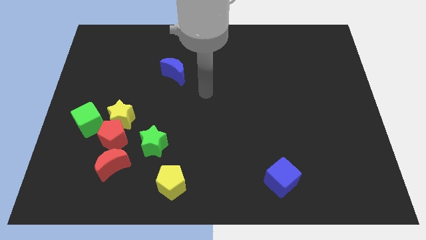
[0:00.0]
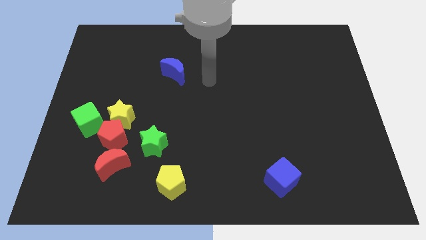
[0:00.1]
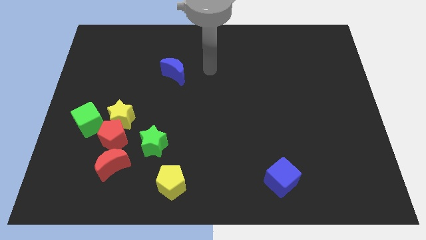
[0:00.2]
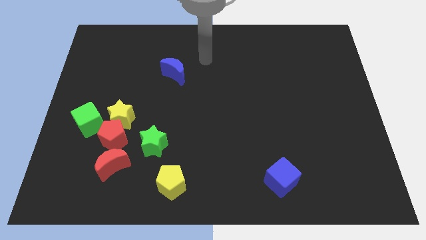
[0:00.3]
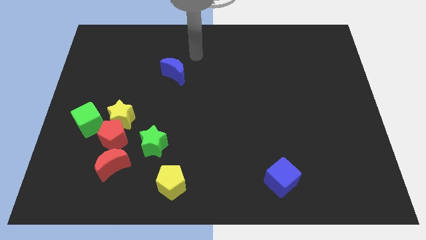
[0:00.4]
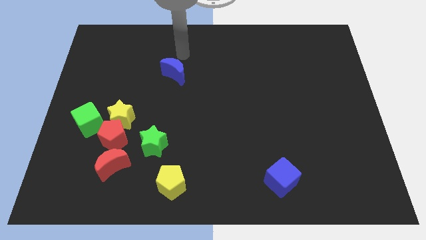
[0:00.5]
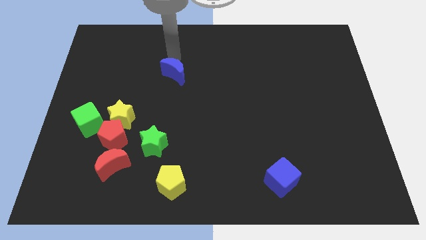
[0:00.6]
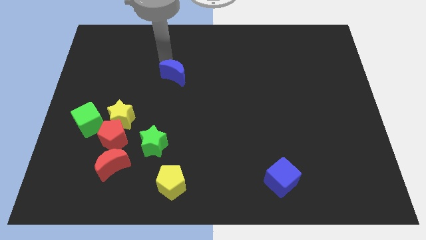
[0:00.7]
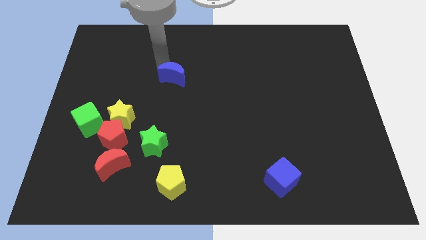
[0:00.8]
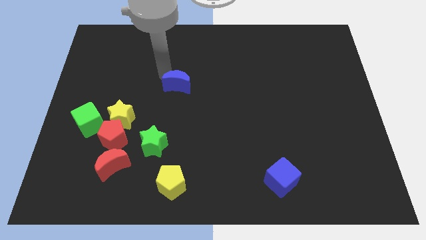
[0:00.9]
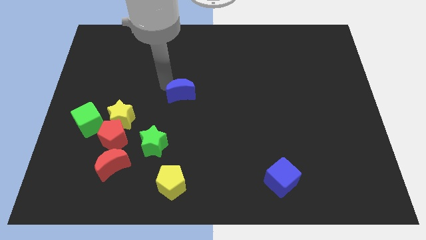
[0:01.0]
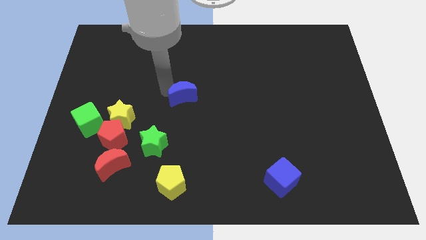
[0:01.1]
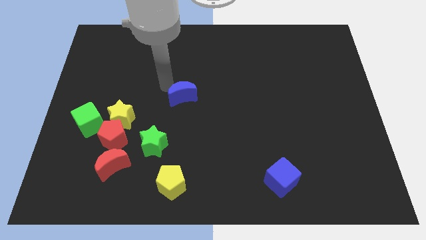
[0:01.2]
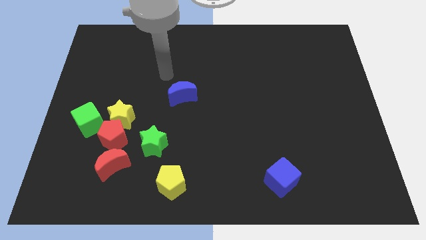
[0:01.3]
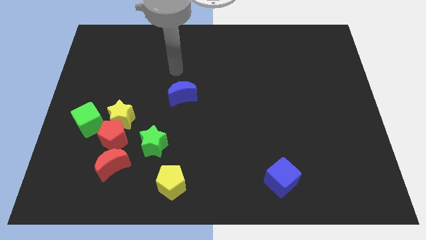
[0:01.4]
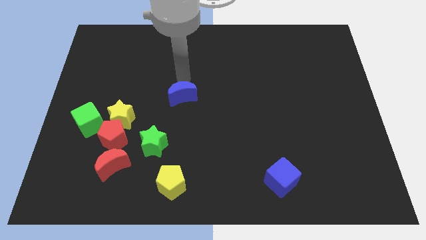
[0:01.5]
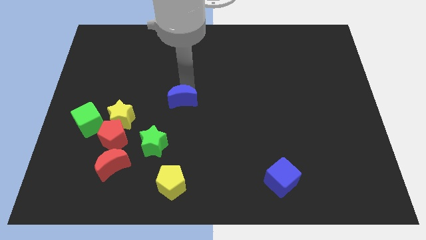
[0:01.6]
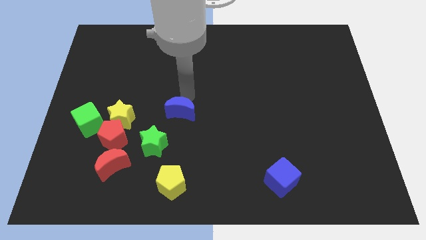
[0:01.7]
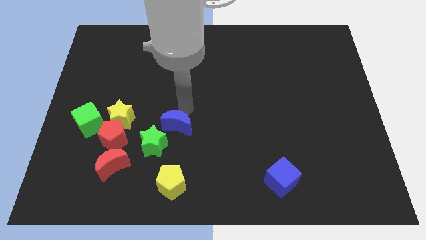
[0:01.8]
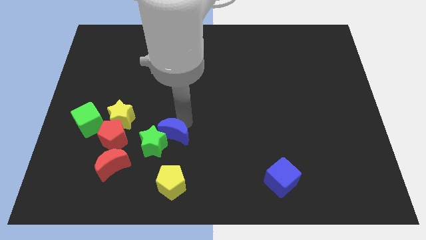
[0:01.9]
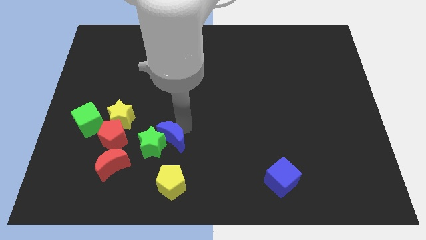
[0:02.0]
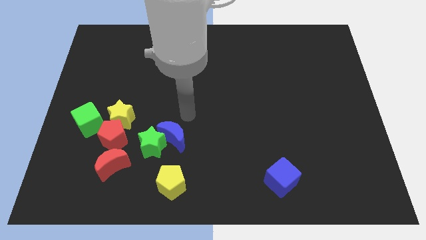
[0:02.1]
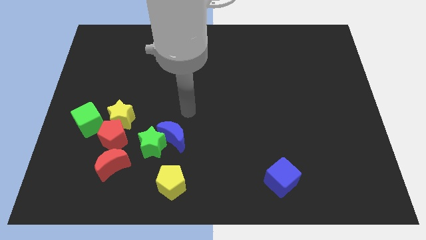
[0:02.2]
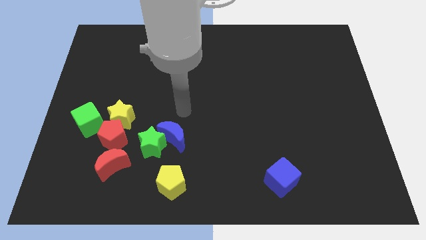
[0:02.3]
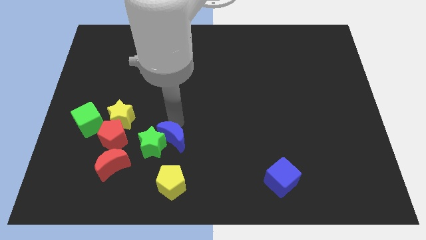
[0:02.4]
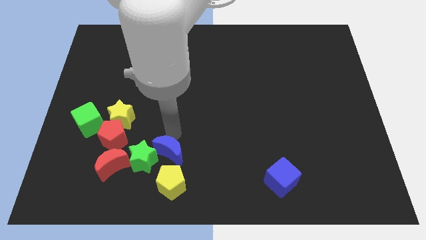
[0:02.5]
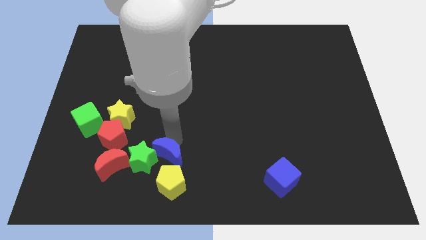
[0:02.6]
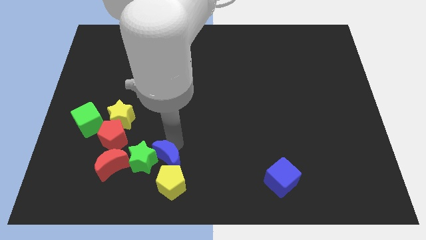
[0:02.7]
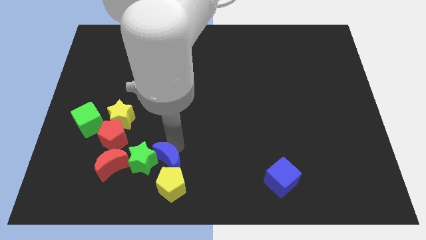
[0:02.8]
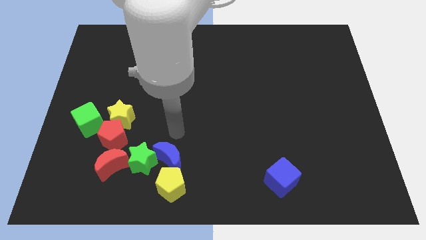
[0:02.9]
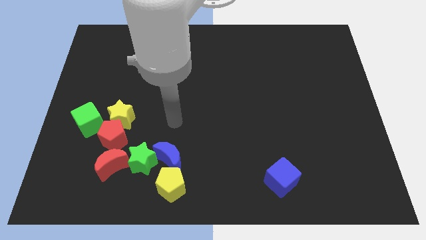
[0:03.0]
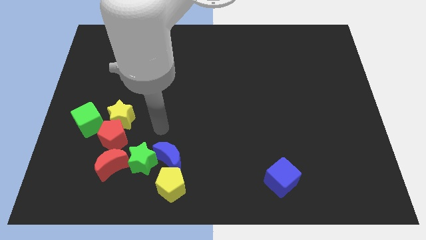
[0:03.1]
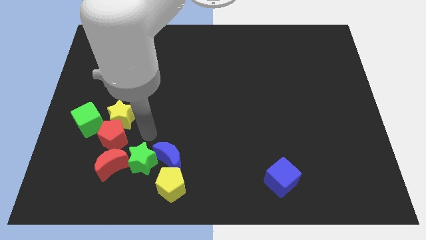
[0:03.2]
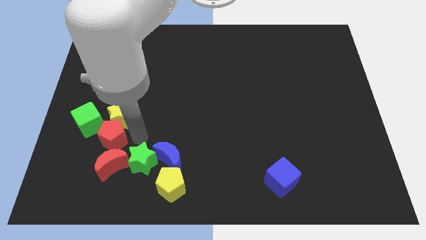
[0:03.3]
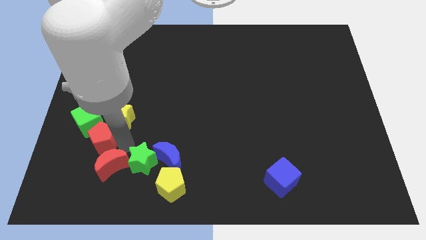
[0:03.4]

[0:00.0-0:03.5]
push the blue crescent into the green star

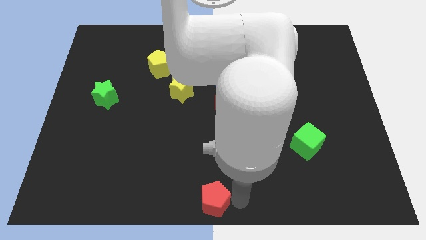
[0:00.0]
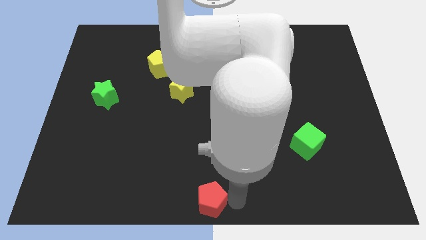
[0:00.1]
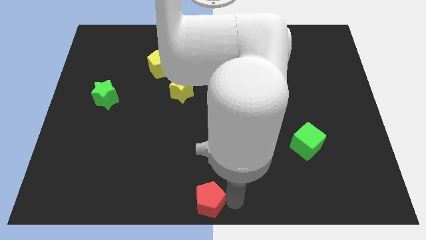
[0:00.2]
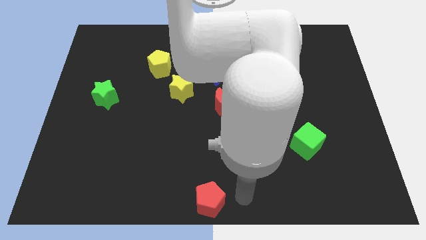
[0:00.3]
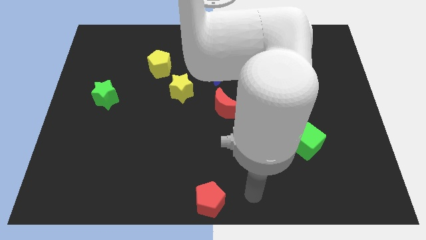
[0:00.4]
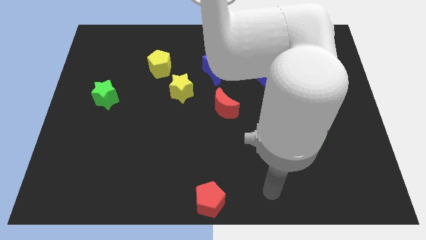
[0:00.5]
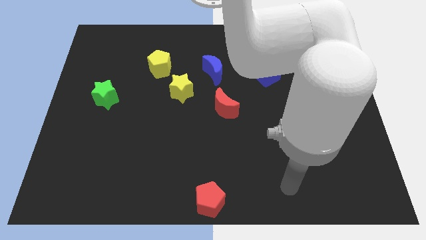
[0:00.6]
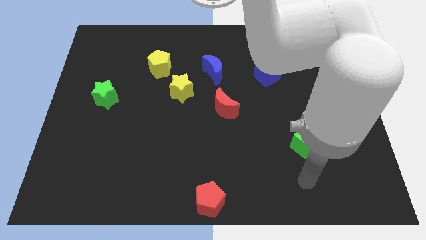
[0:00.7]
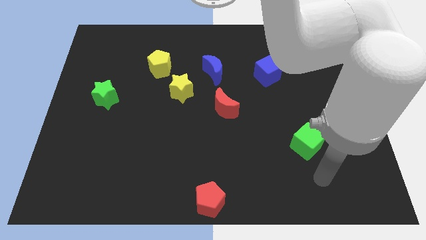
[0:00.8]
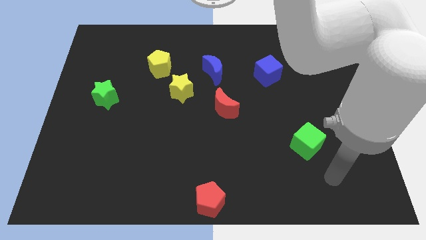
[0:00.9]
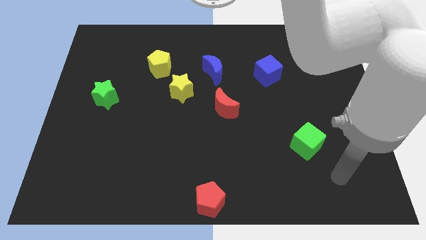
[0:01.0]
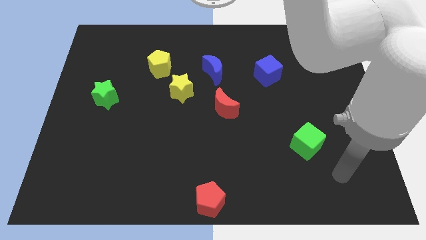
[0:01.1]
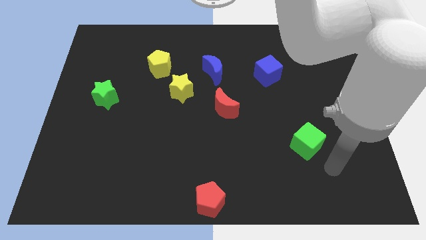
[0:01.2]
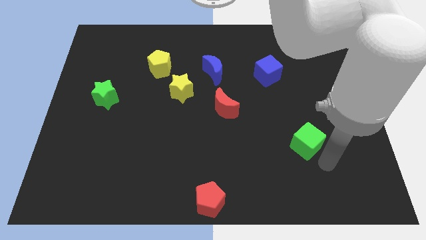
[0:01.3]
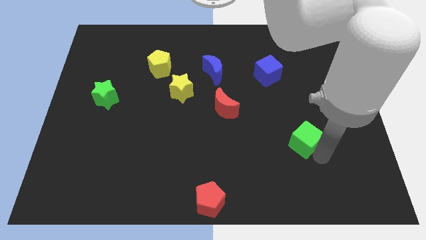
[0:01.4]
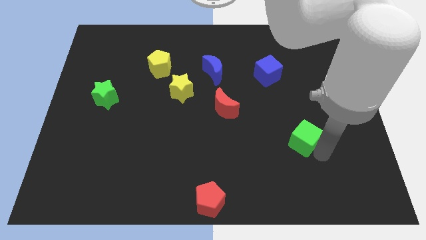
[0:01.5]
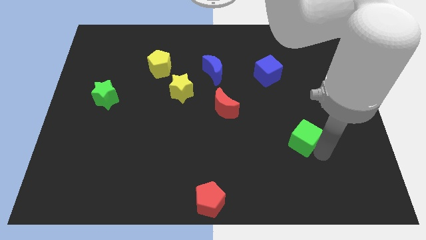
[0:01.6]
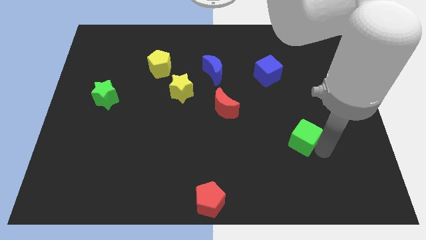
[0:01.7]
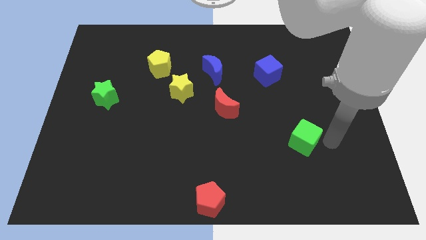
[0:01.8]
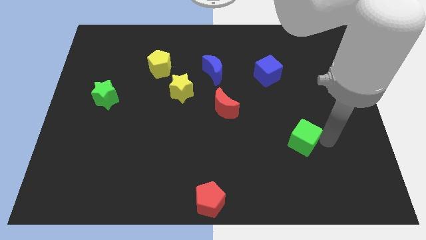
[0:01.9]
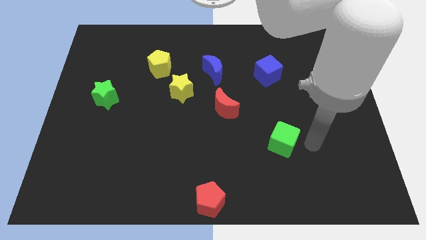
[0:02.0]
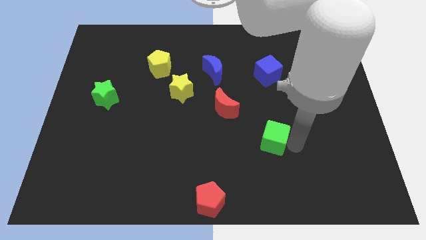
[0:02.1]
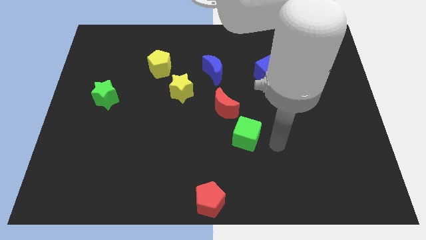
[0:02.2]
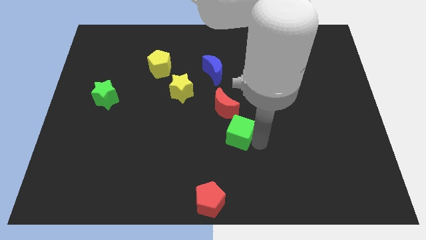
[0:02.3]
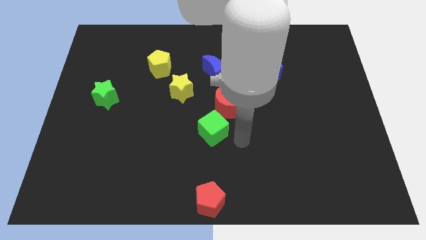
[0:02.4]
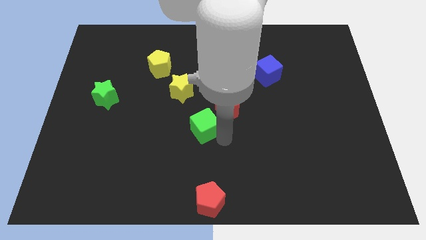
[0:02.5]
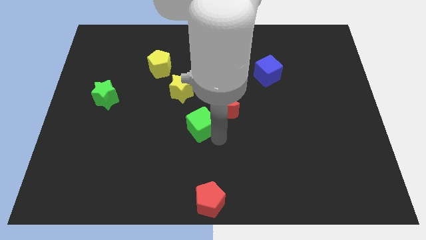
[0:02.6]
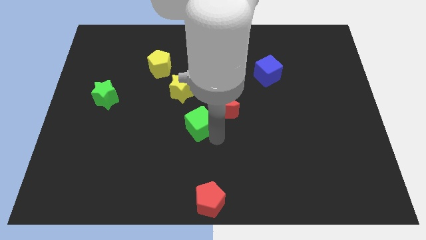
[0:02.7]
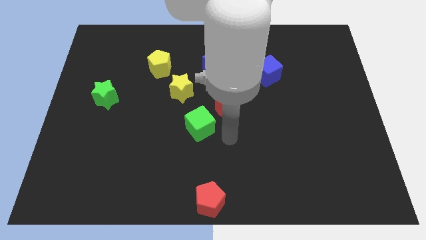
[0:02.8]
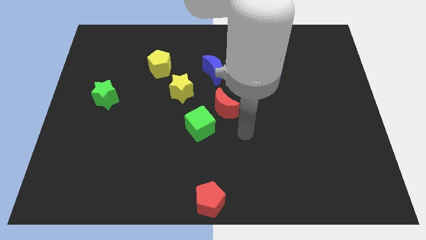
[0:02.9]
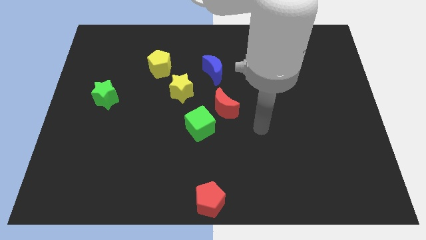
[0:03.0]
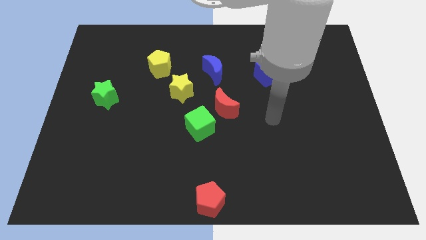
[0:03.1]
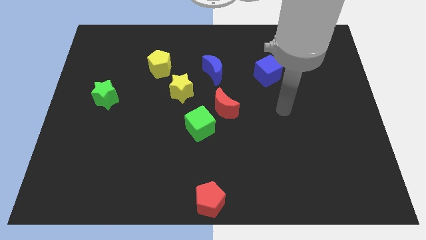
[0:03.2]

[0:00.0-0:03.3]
push the green cube diagonally to the red crescent

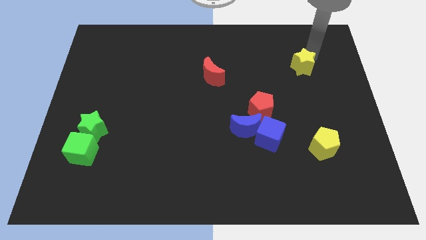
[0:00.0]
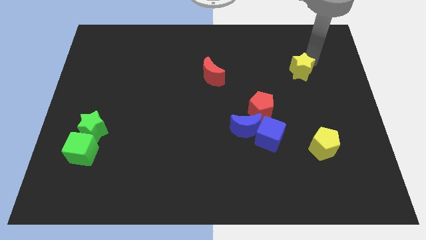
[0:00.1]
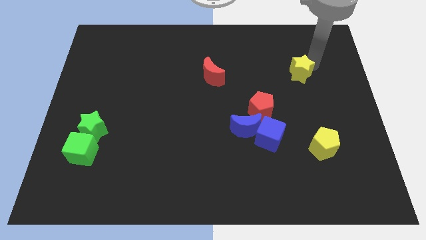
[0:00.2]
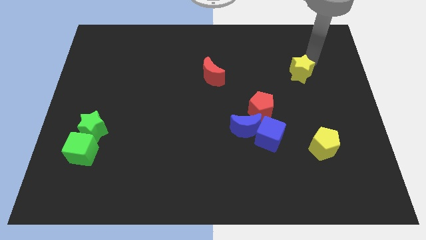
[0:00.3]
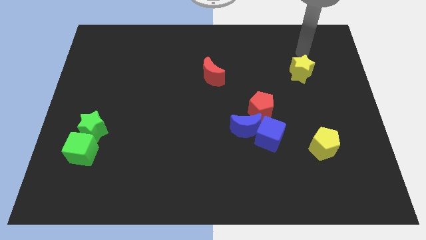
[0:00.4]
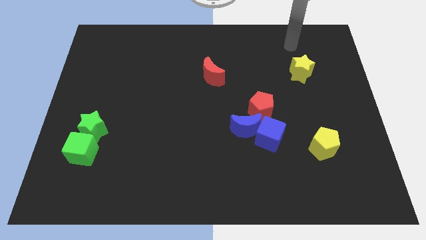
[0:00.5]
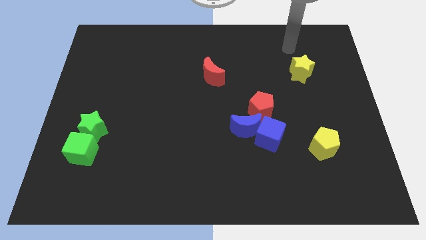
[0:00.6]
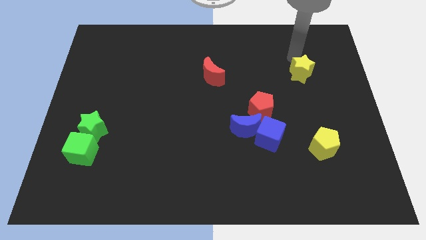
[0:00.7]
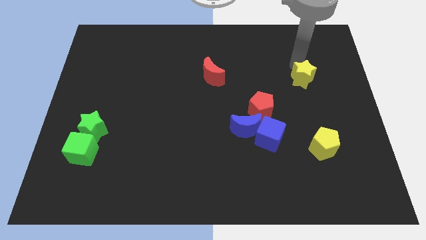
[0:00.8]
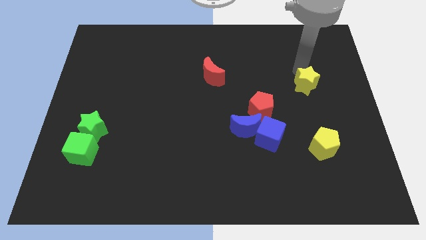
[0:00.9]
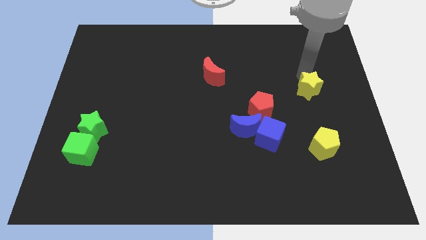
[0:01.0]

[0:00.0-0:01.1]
move the yellow star vertically on the top of the yellow pentagon

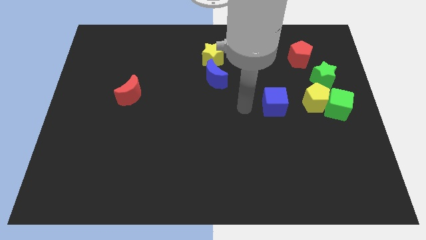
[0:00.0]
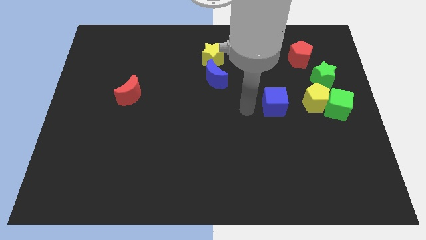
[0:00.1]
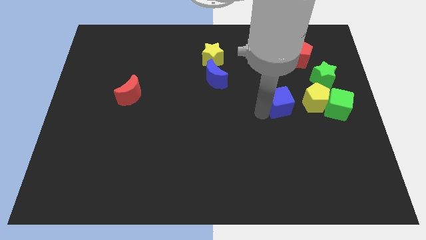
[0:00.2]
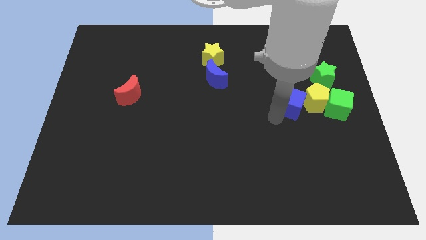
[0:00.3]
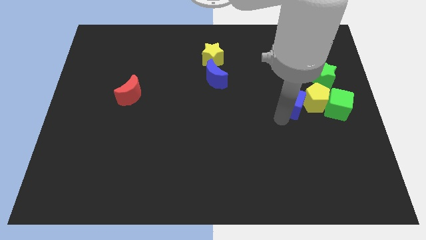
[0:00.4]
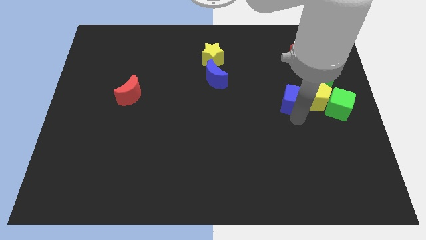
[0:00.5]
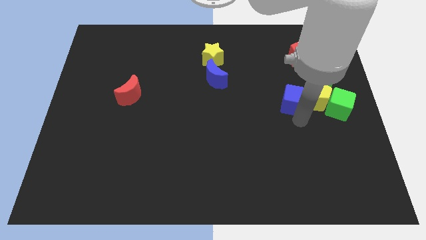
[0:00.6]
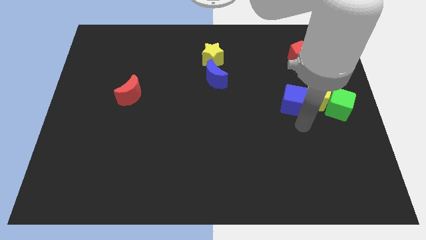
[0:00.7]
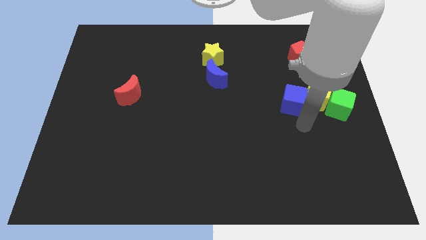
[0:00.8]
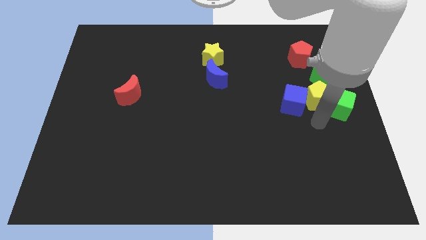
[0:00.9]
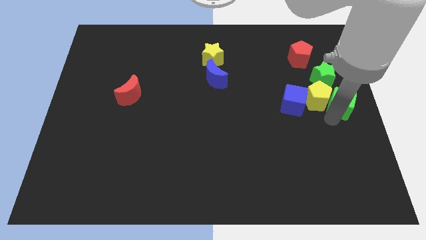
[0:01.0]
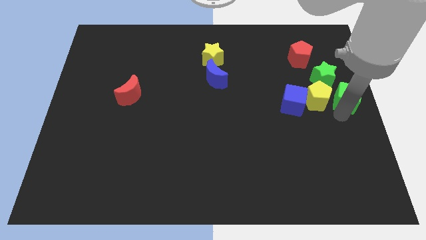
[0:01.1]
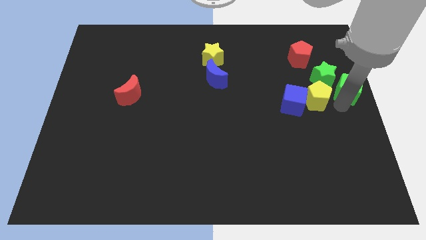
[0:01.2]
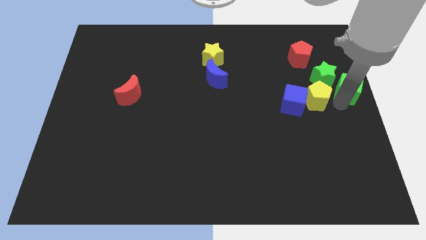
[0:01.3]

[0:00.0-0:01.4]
sligtly move the green cube to the center right
